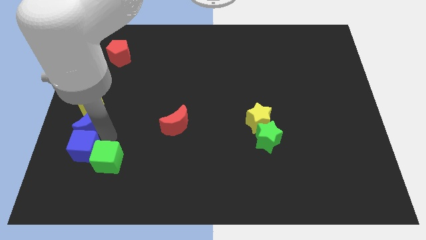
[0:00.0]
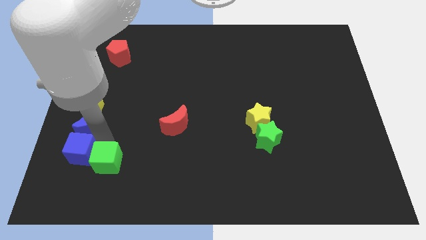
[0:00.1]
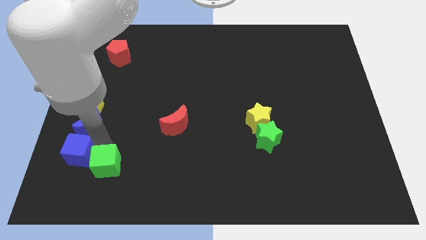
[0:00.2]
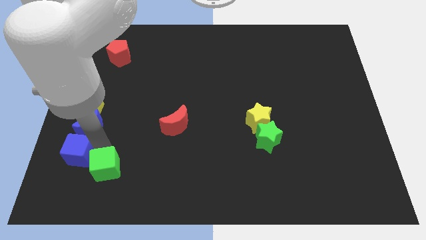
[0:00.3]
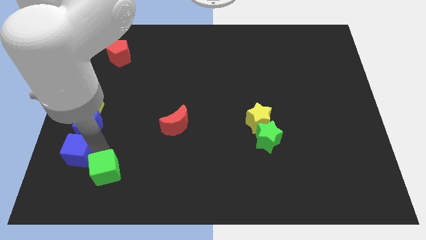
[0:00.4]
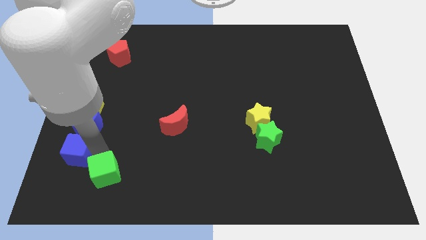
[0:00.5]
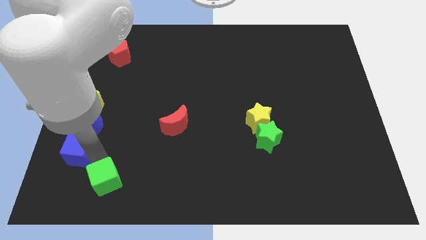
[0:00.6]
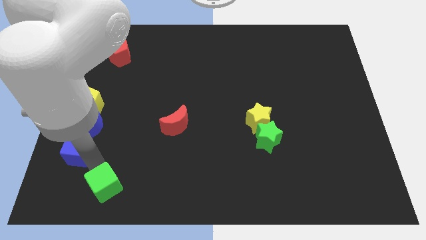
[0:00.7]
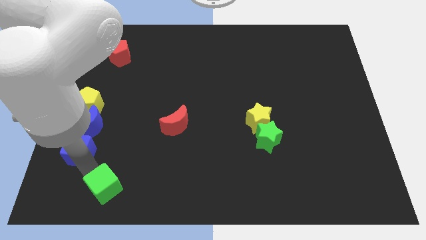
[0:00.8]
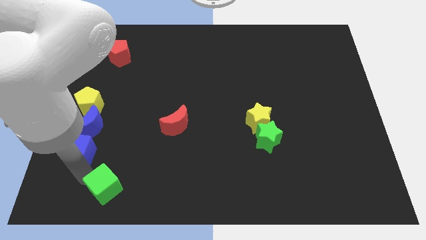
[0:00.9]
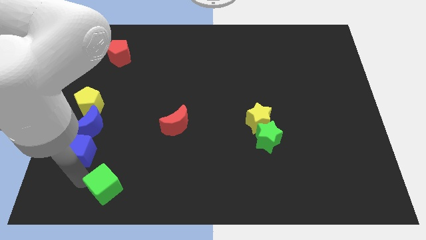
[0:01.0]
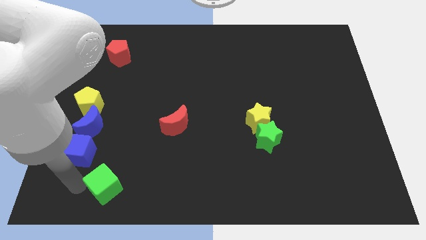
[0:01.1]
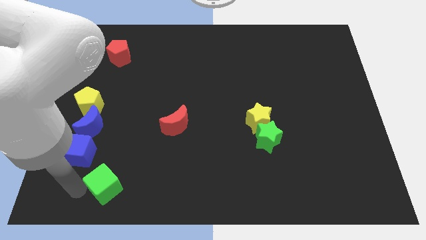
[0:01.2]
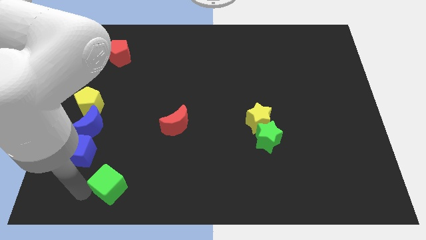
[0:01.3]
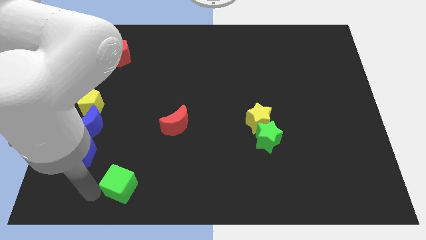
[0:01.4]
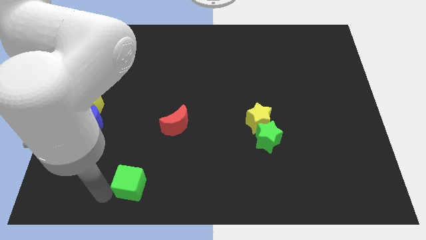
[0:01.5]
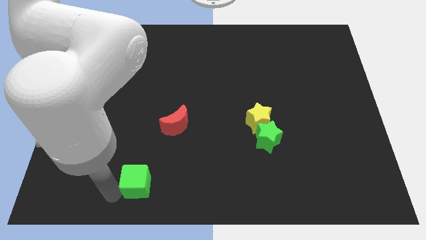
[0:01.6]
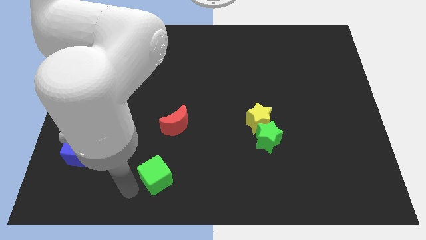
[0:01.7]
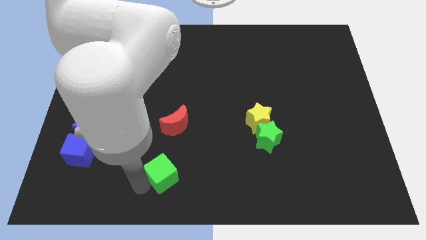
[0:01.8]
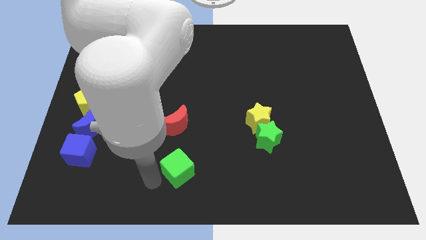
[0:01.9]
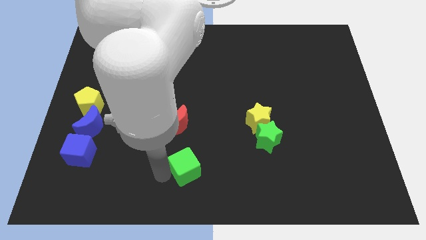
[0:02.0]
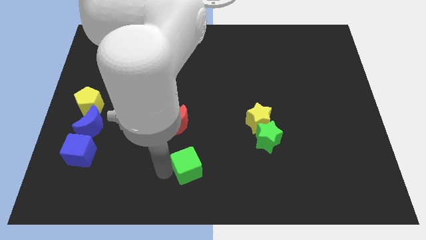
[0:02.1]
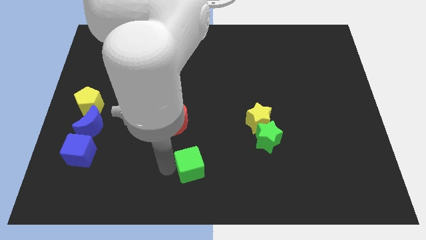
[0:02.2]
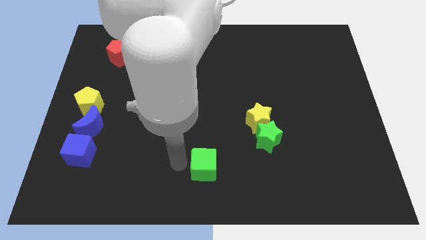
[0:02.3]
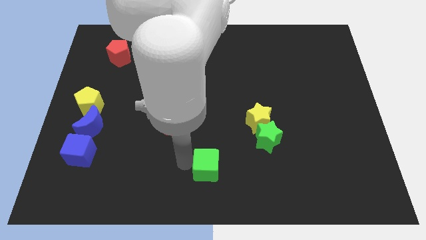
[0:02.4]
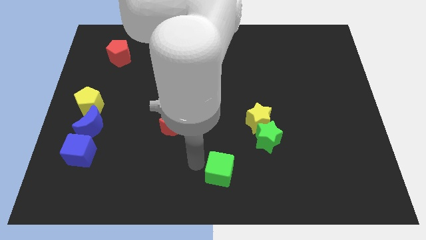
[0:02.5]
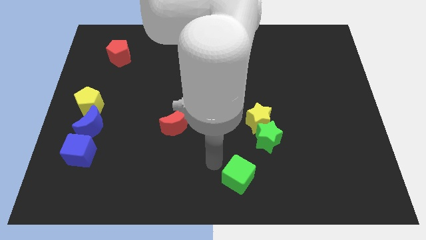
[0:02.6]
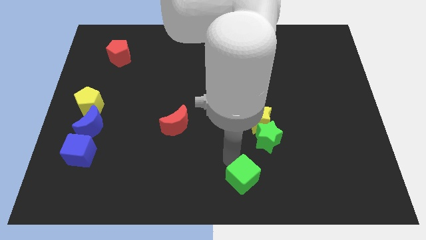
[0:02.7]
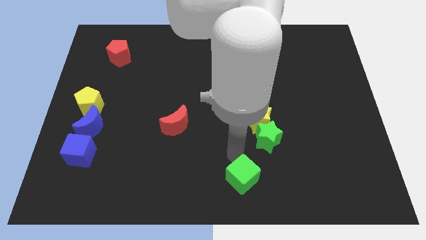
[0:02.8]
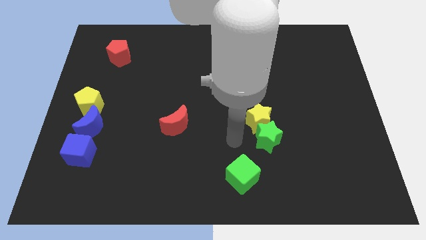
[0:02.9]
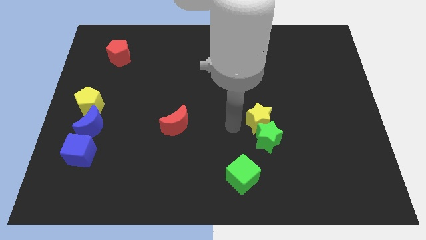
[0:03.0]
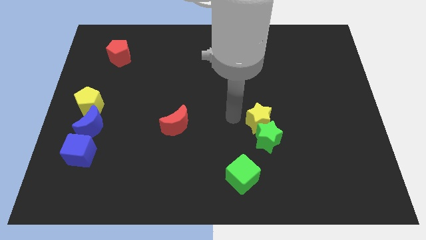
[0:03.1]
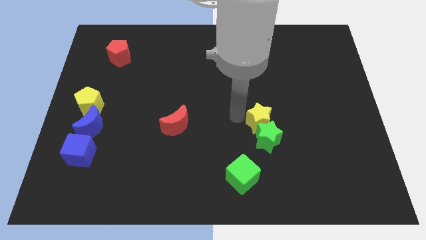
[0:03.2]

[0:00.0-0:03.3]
move green cube diagonally on the bottom left side of the green star

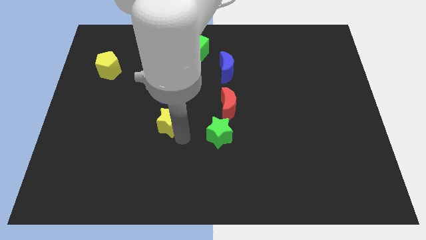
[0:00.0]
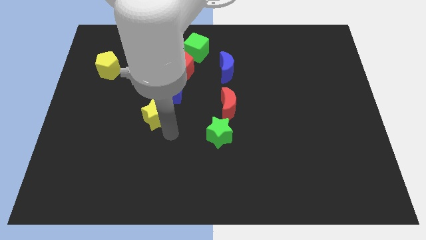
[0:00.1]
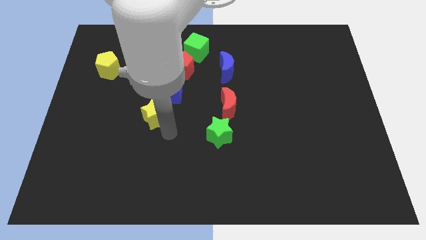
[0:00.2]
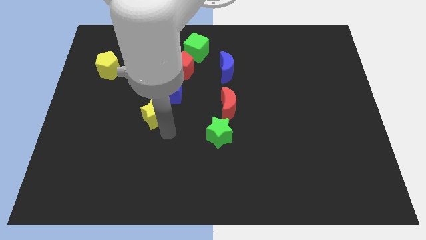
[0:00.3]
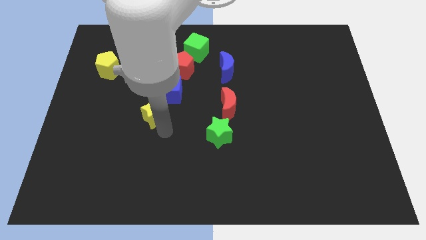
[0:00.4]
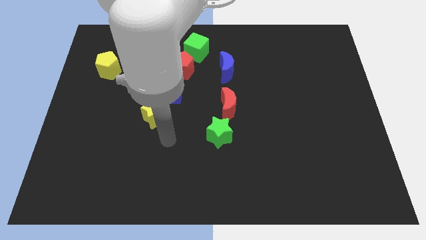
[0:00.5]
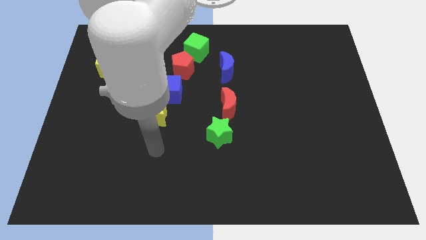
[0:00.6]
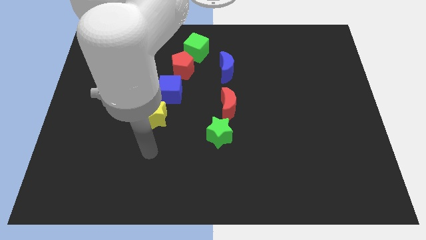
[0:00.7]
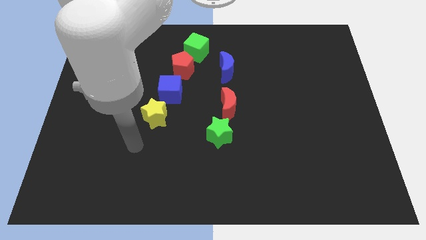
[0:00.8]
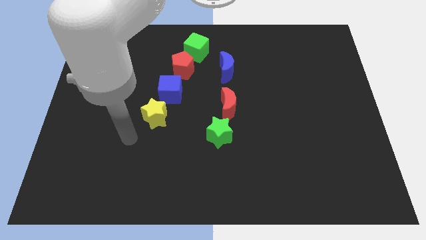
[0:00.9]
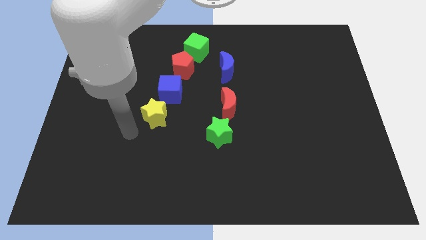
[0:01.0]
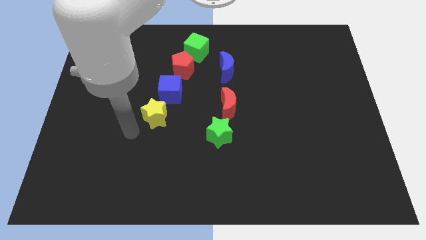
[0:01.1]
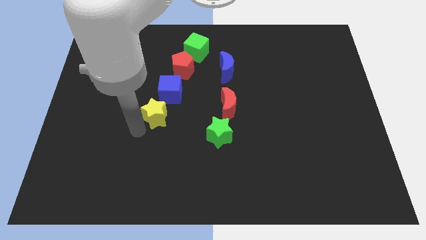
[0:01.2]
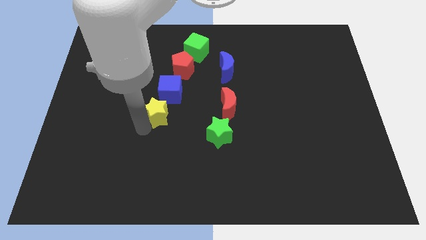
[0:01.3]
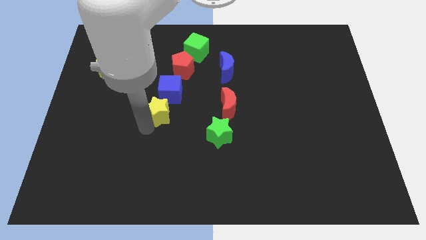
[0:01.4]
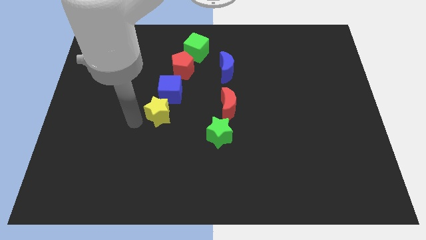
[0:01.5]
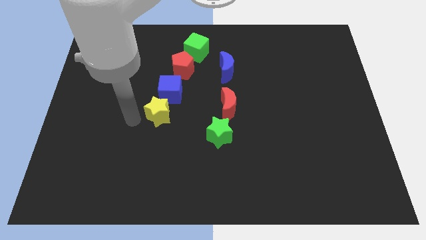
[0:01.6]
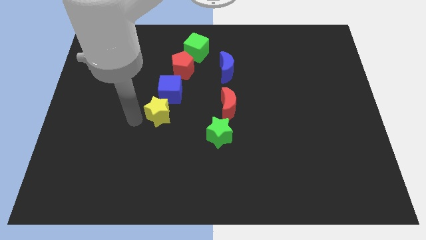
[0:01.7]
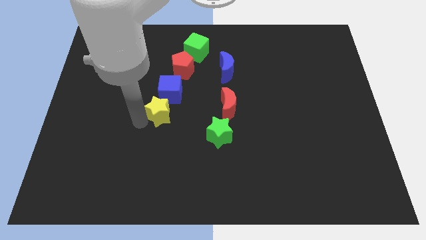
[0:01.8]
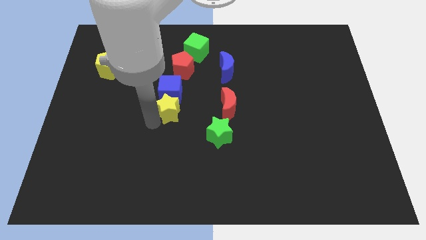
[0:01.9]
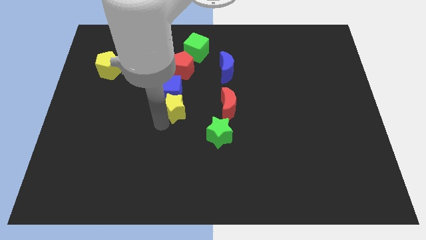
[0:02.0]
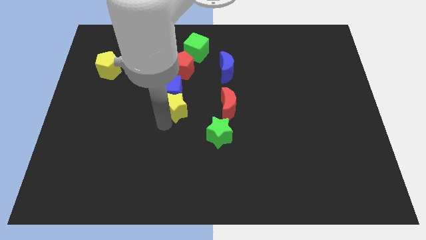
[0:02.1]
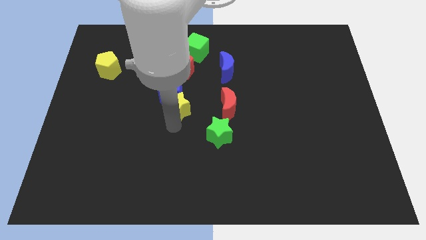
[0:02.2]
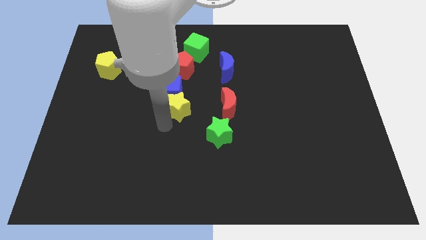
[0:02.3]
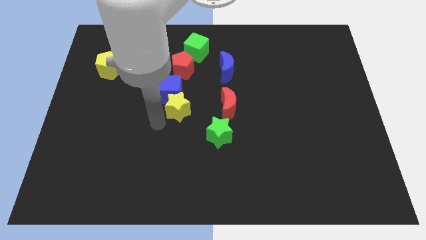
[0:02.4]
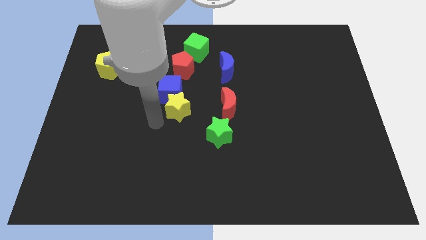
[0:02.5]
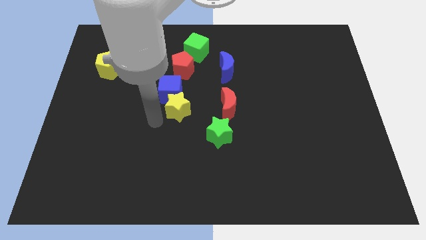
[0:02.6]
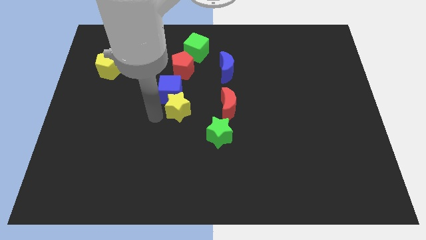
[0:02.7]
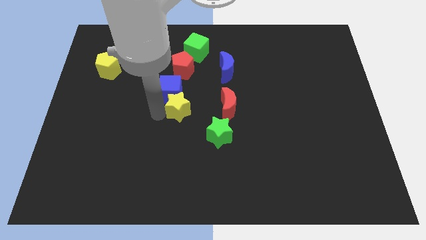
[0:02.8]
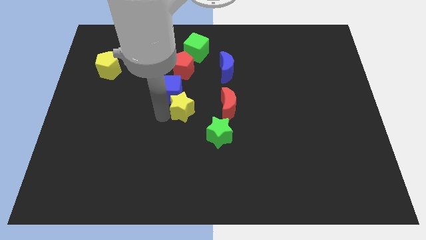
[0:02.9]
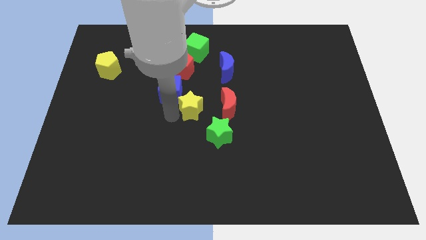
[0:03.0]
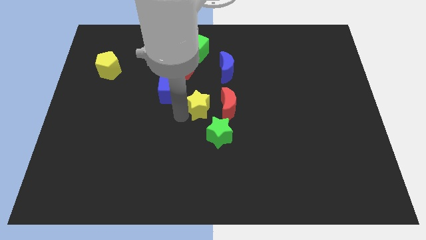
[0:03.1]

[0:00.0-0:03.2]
place the yellow star diagonally in between the blue cube and green star

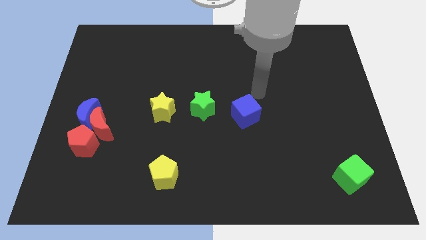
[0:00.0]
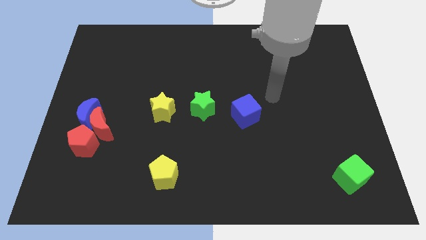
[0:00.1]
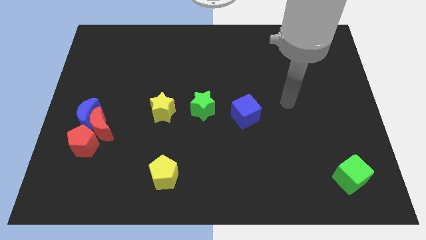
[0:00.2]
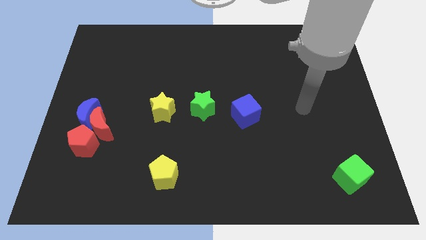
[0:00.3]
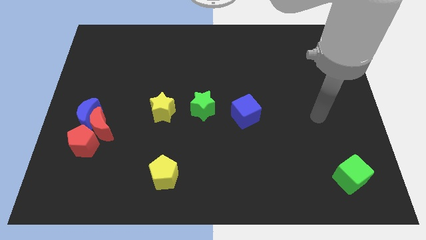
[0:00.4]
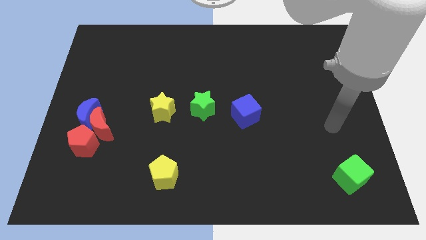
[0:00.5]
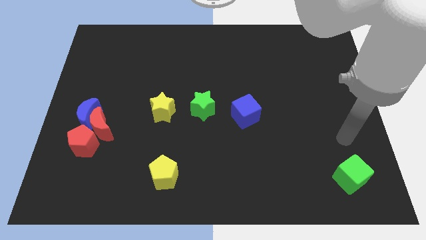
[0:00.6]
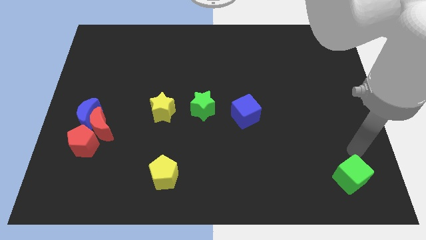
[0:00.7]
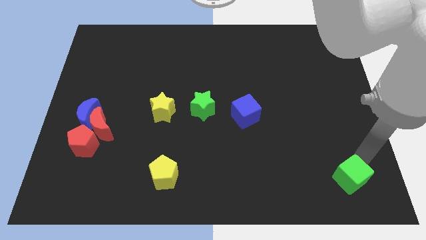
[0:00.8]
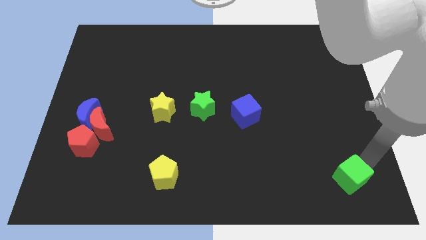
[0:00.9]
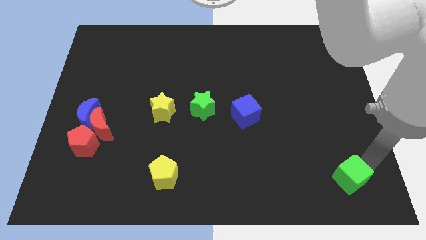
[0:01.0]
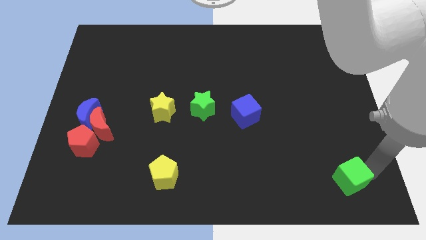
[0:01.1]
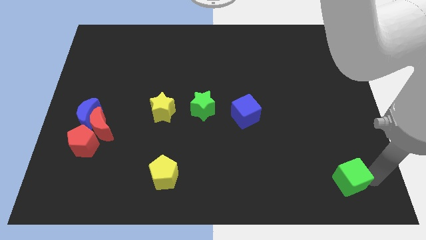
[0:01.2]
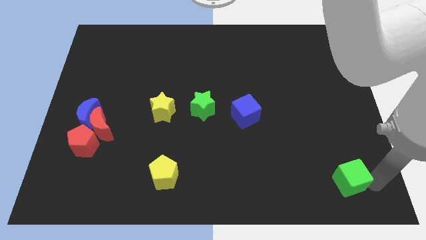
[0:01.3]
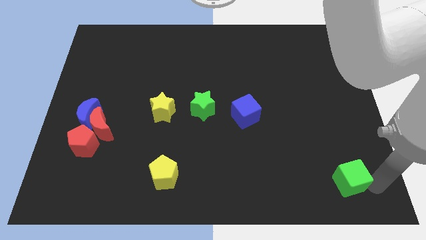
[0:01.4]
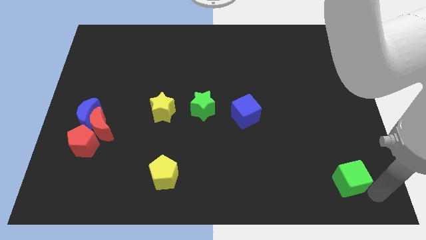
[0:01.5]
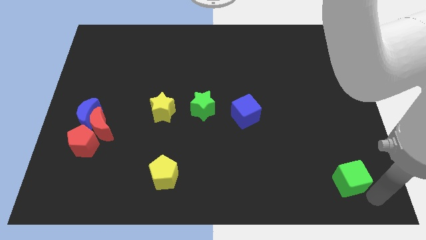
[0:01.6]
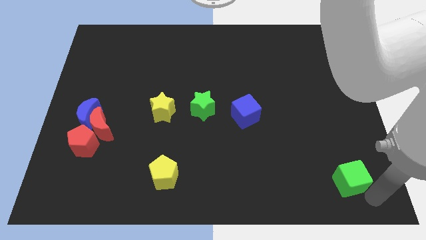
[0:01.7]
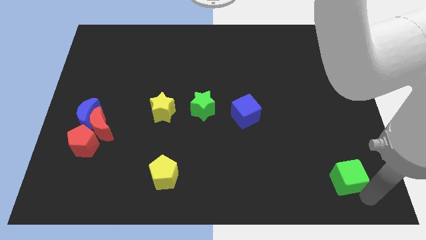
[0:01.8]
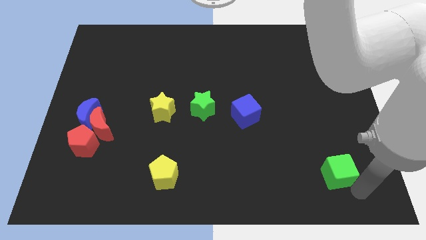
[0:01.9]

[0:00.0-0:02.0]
move the arm to the green cube

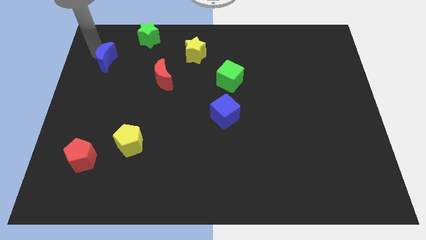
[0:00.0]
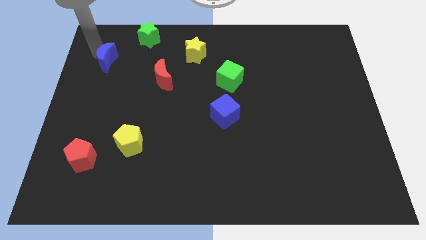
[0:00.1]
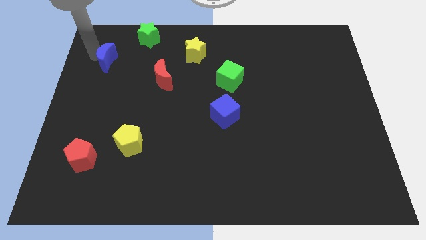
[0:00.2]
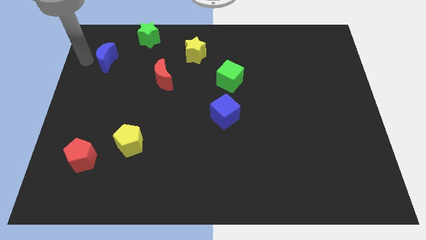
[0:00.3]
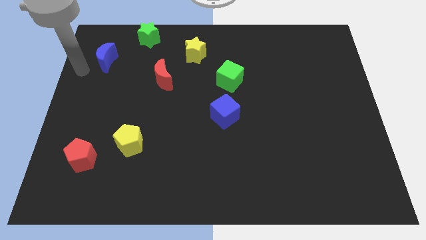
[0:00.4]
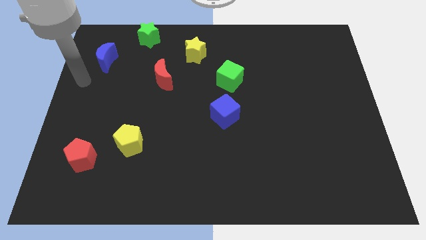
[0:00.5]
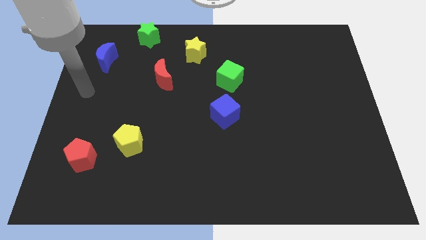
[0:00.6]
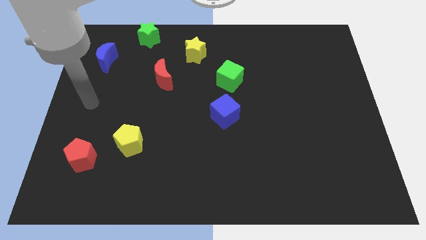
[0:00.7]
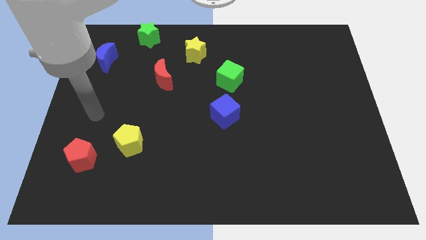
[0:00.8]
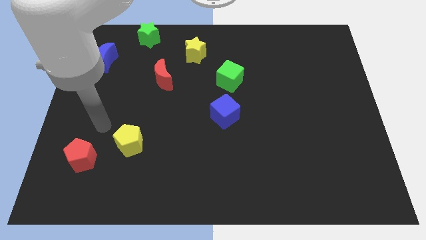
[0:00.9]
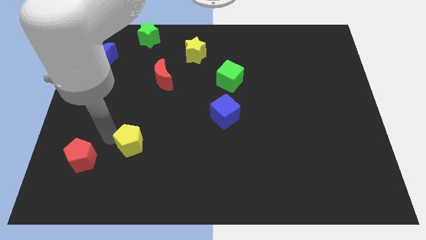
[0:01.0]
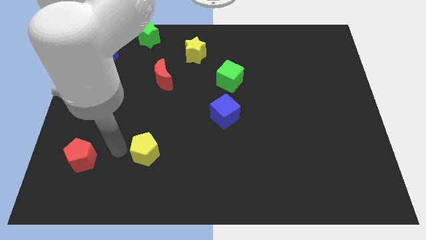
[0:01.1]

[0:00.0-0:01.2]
place your hand at the top left corner of the yellow pentagon
